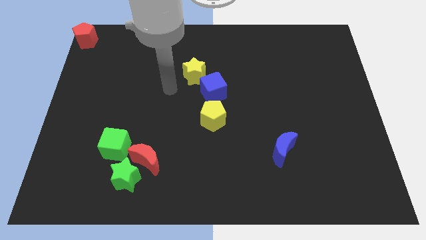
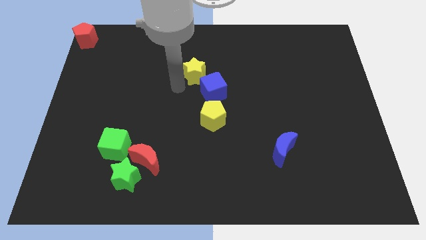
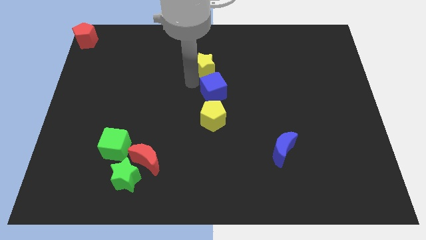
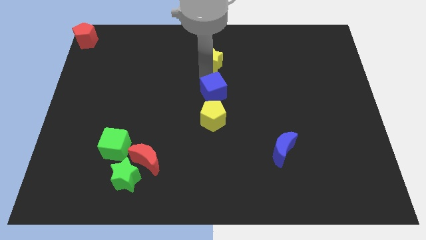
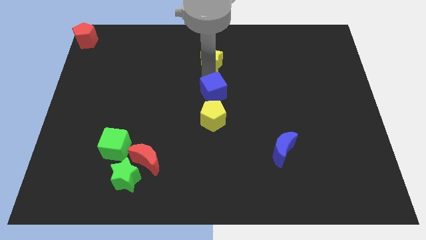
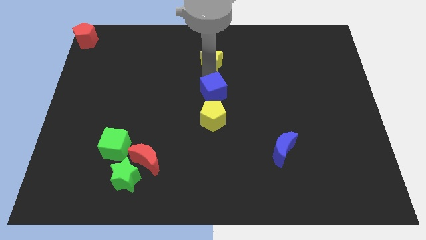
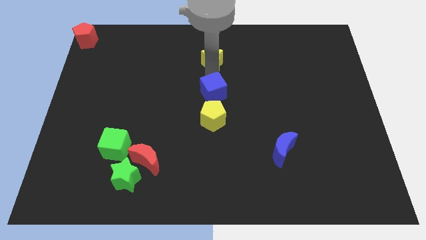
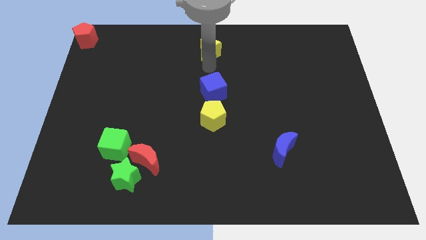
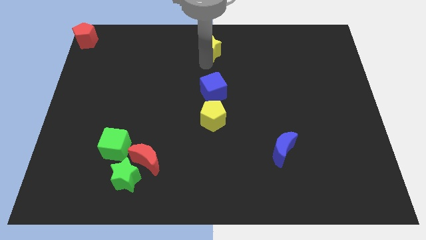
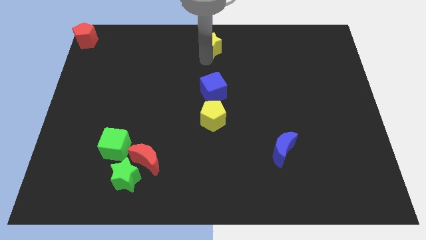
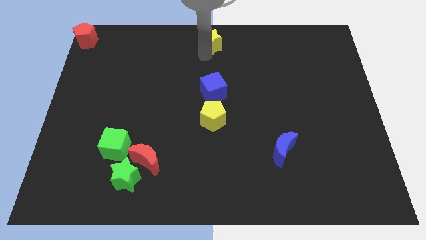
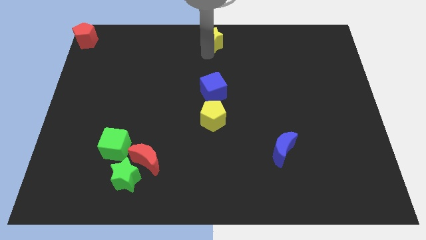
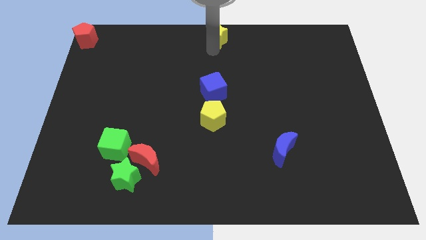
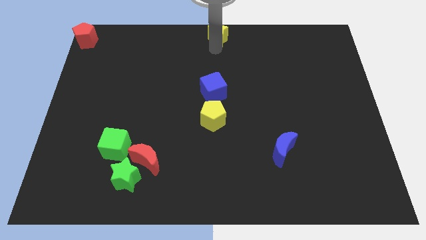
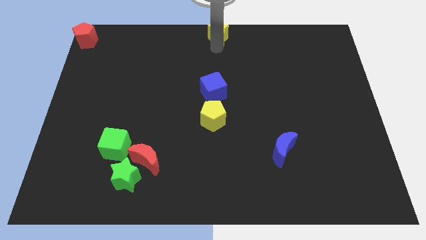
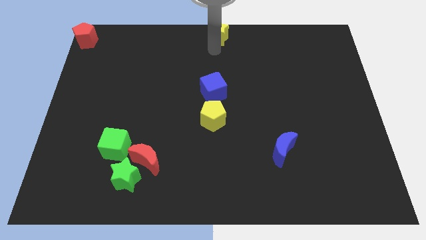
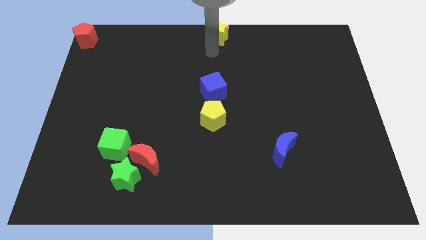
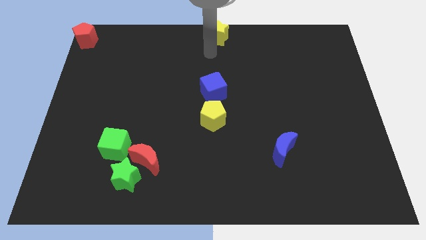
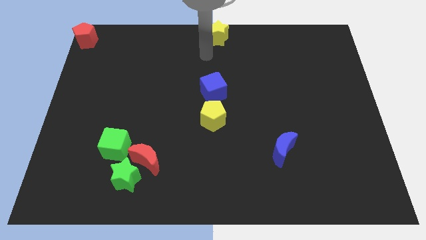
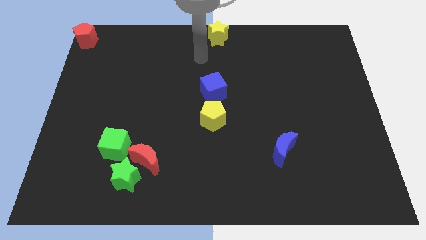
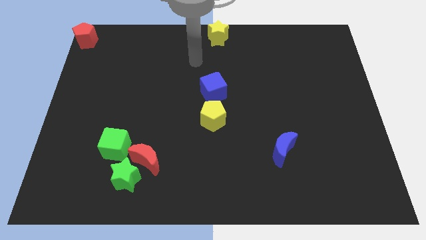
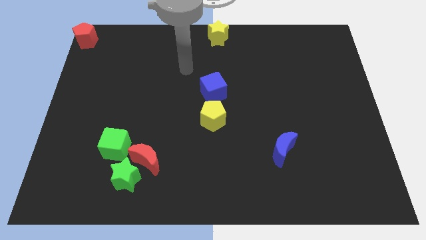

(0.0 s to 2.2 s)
move the yellow star to the top center of the board

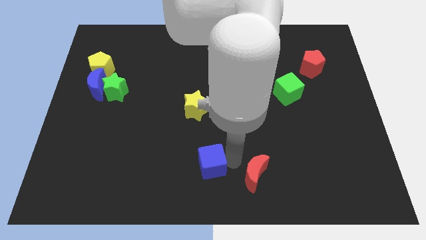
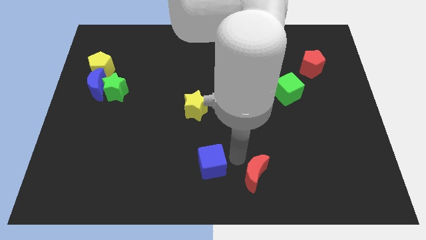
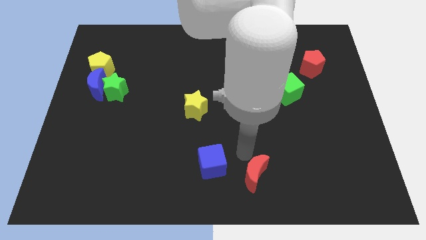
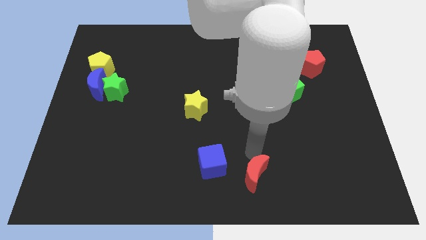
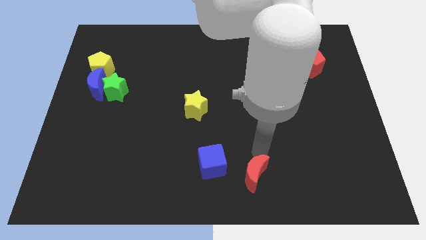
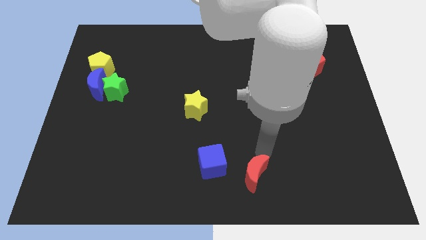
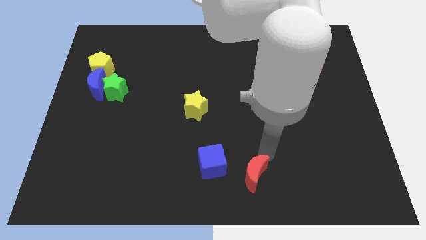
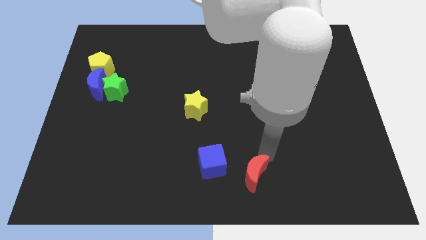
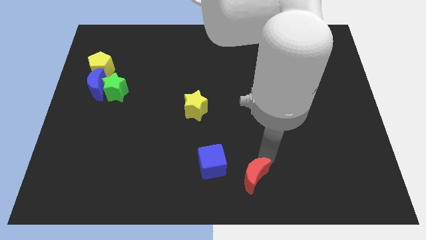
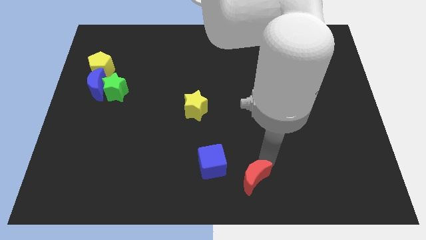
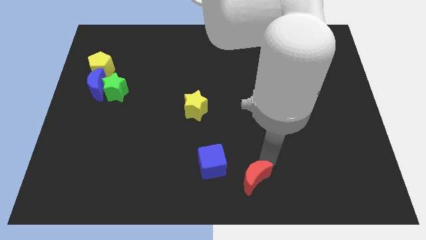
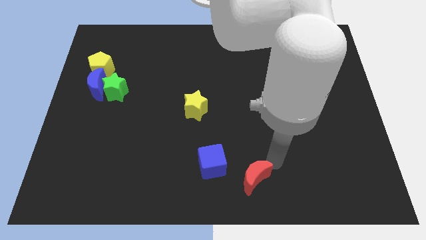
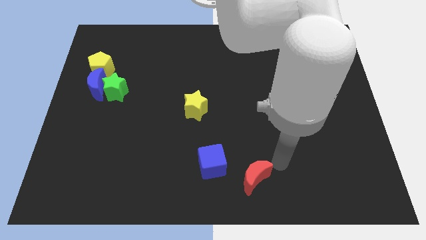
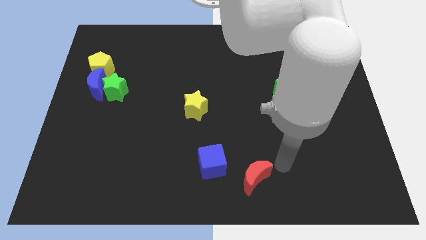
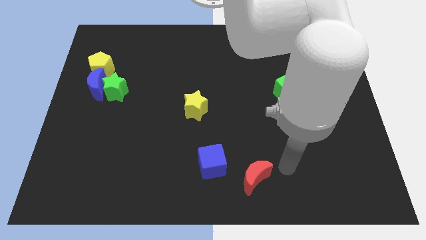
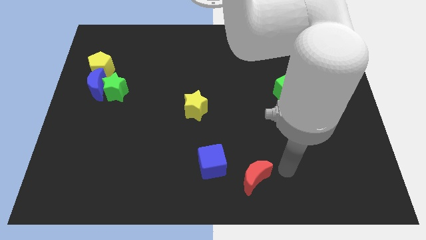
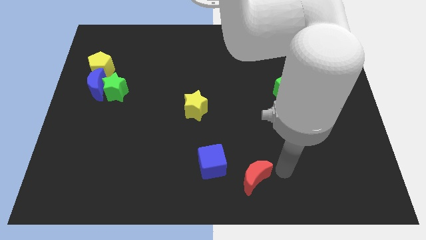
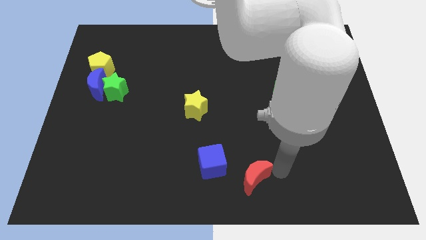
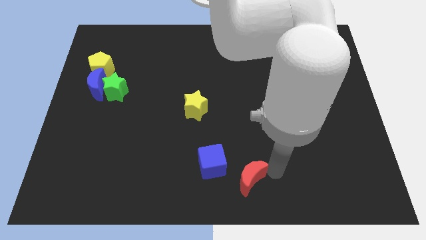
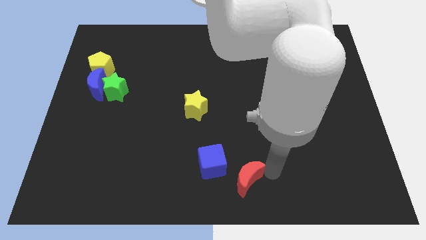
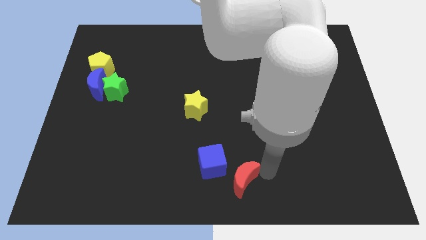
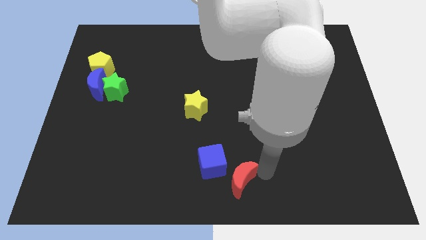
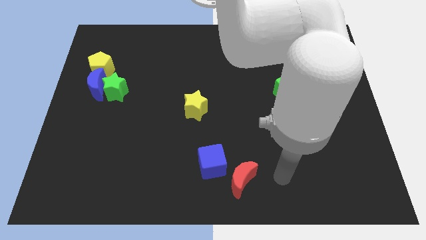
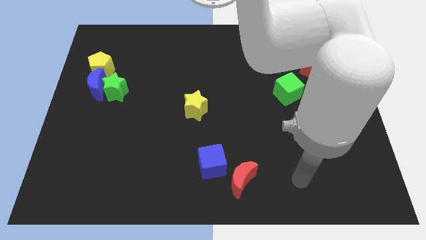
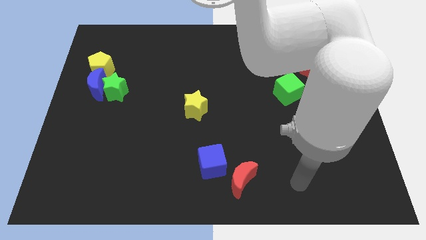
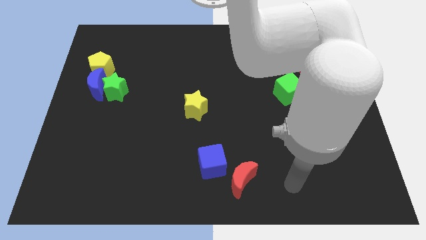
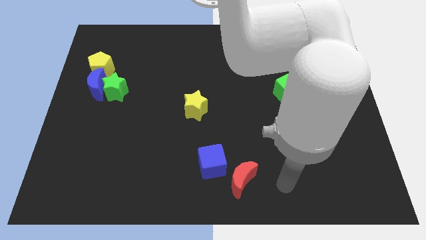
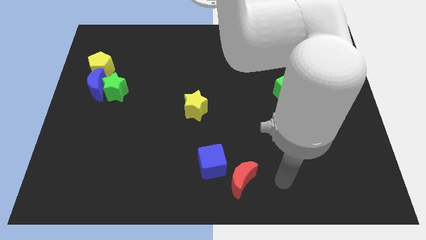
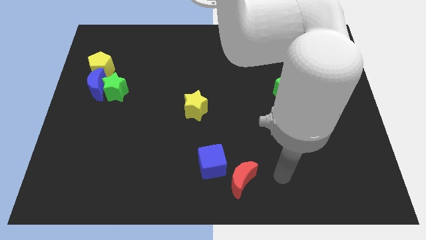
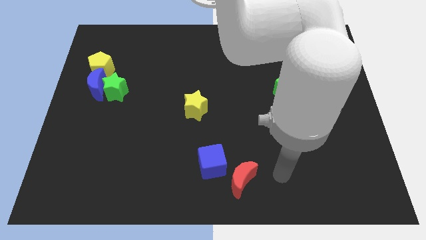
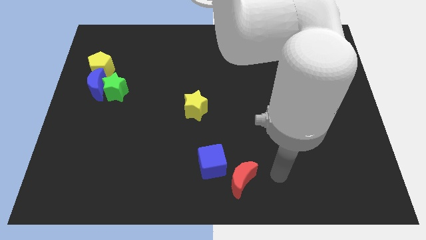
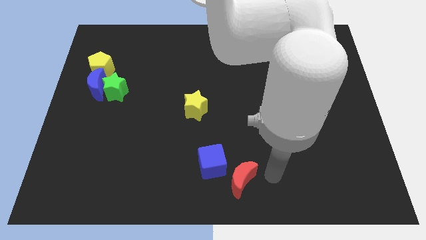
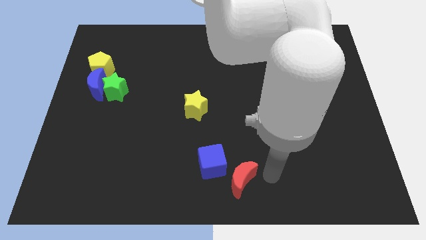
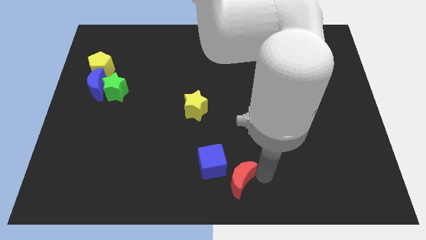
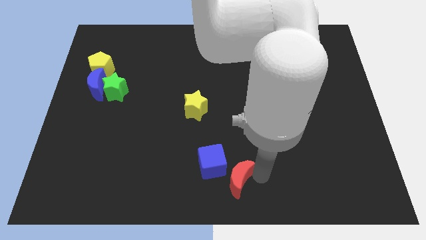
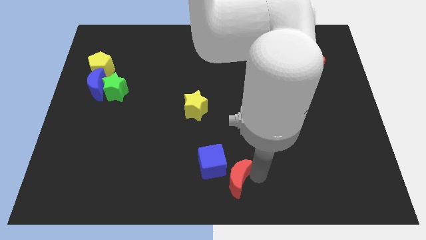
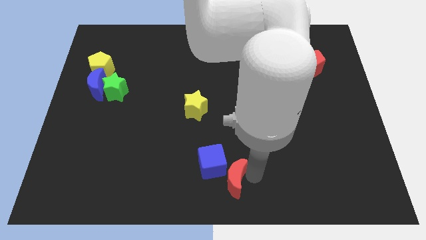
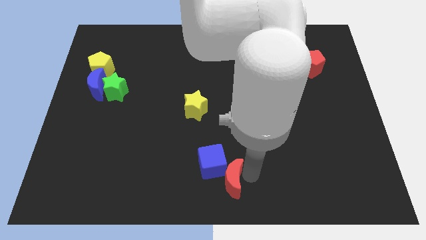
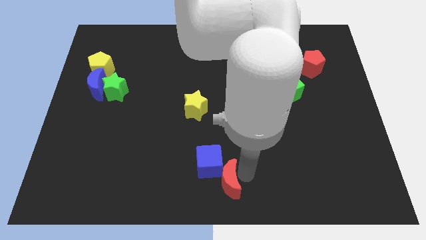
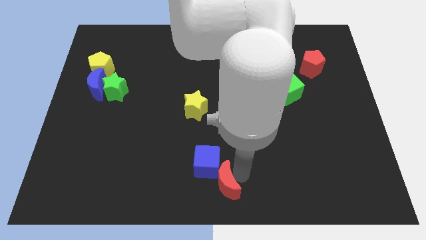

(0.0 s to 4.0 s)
push the red crescent into the blue cube

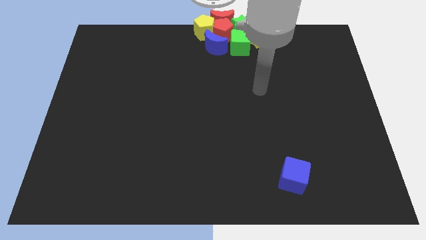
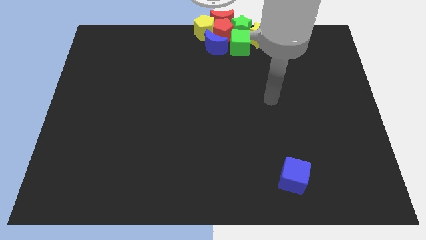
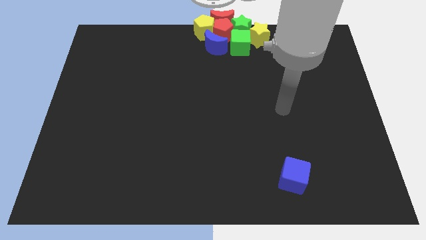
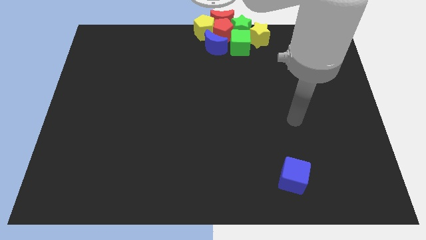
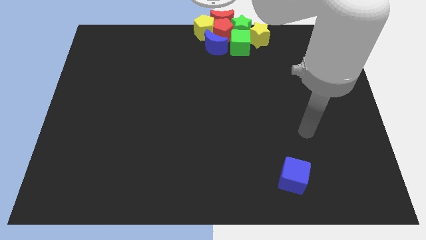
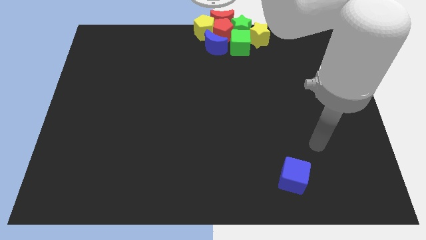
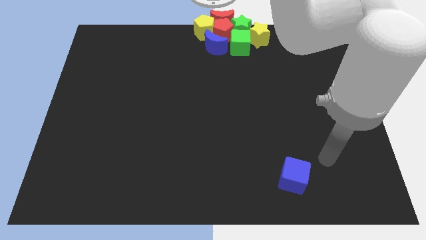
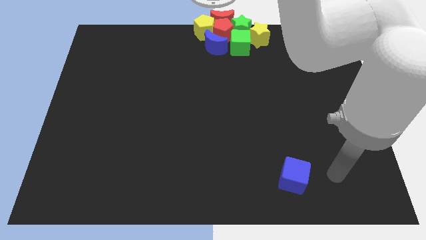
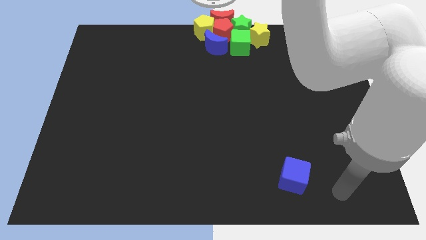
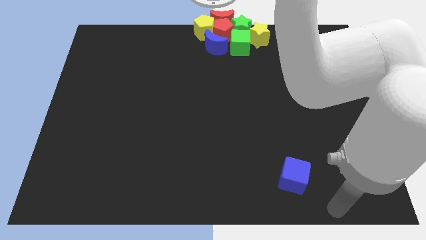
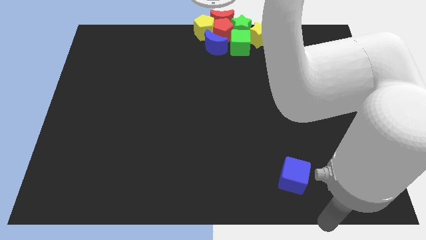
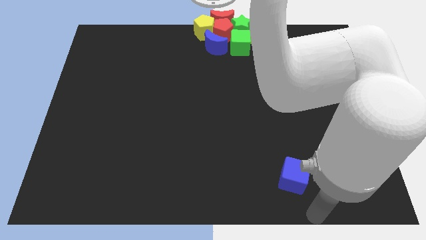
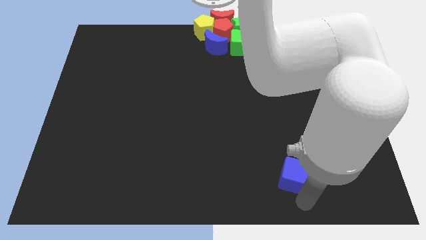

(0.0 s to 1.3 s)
move your arm towards the blue cube

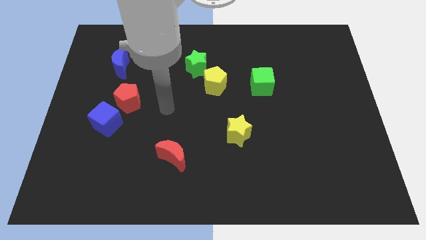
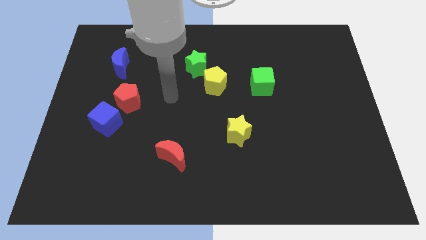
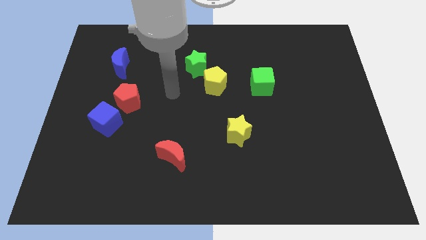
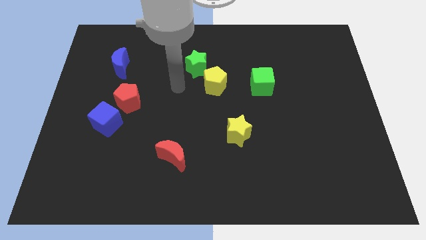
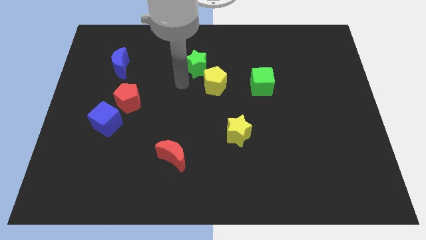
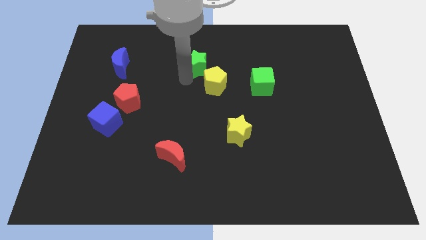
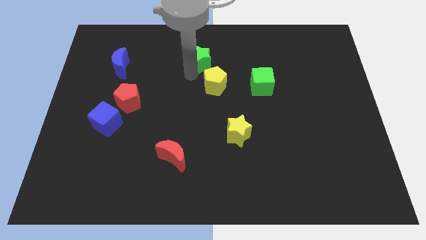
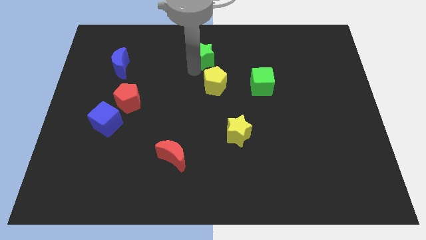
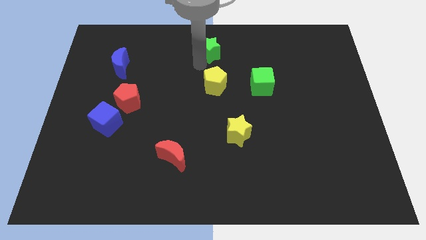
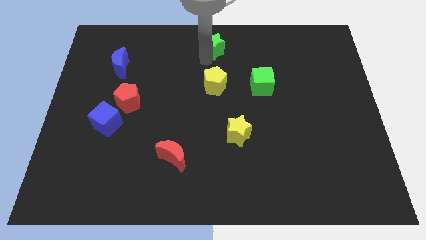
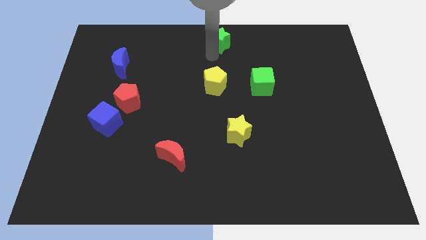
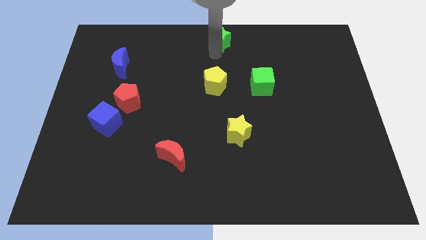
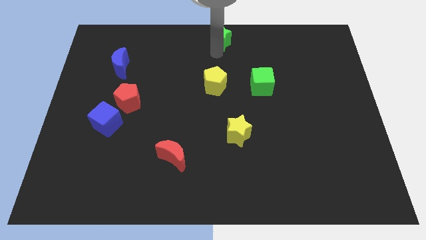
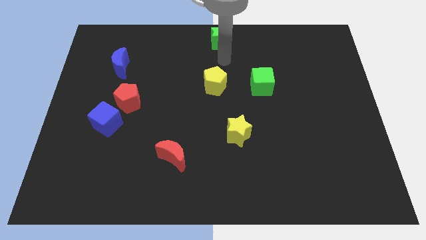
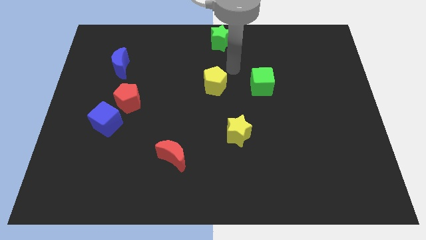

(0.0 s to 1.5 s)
push the green star to the top center

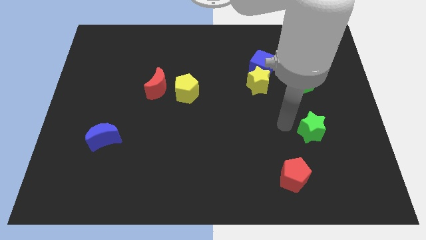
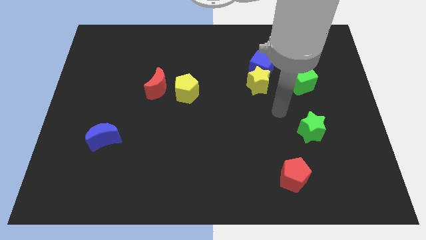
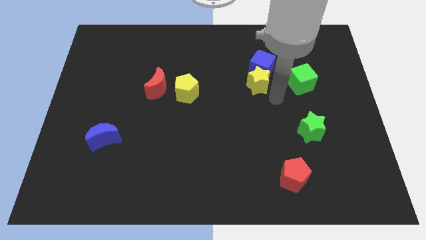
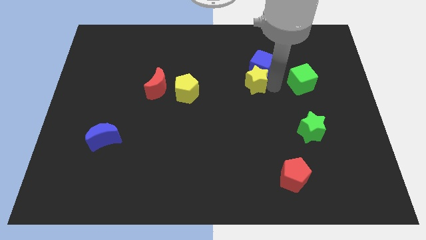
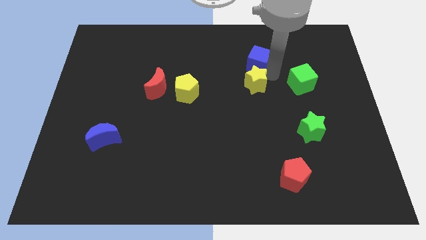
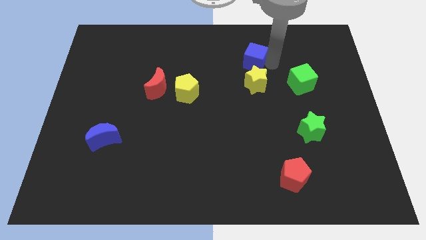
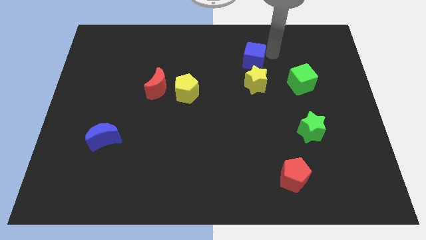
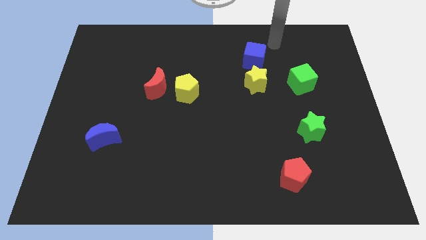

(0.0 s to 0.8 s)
move blue cube slightly to the left
